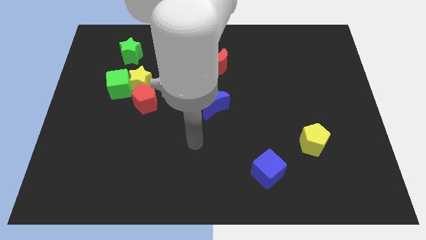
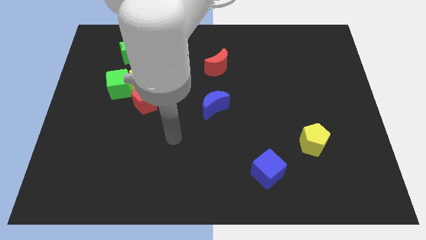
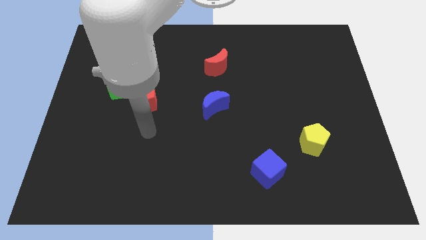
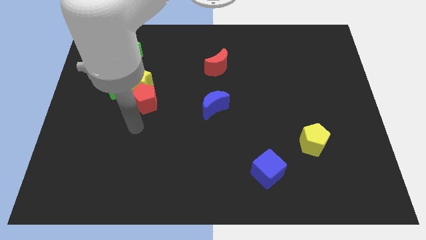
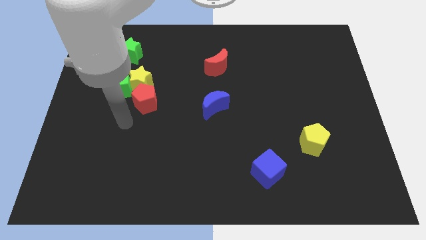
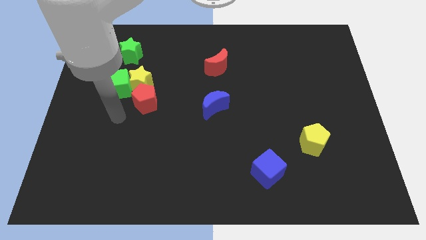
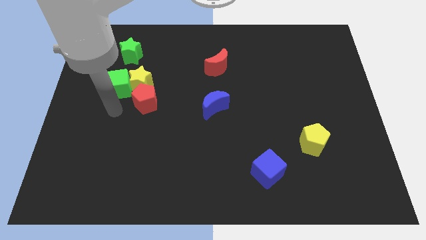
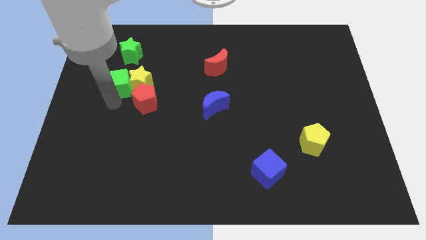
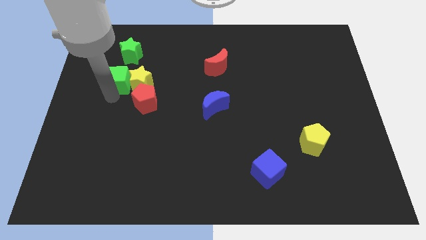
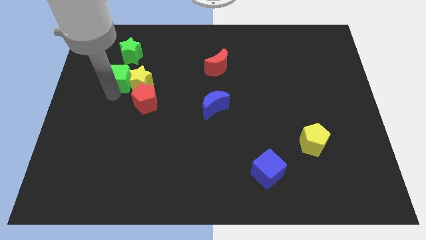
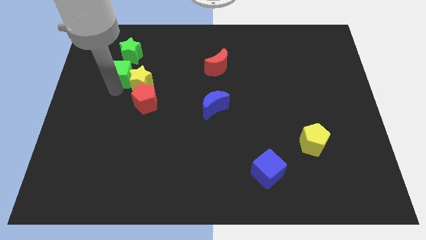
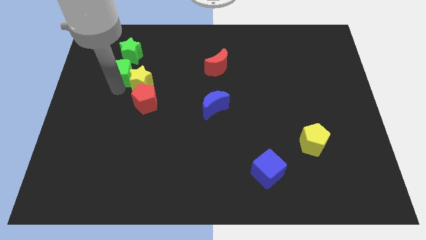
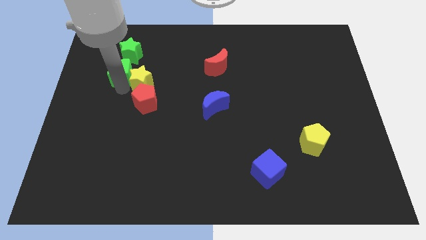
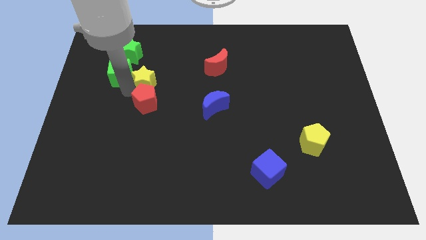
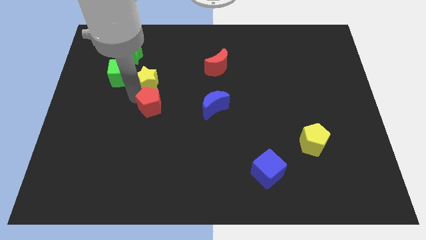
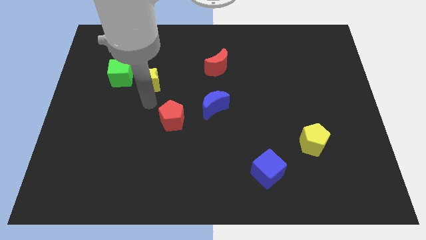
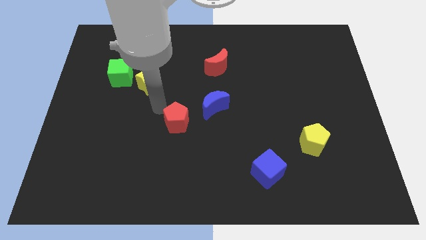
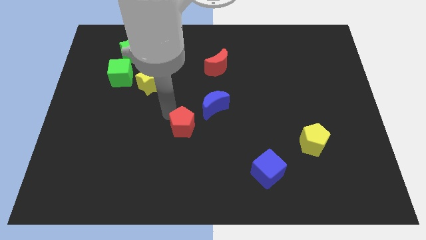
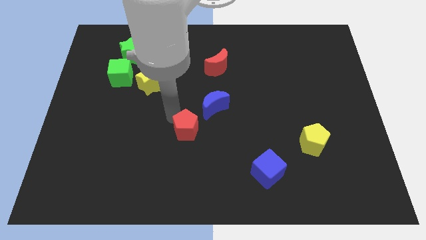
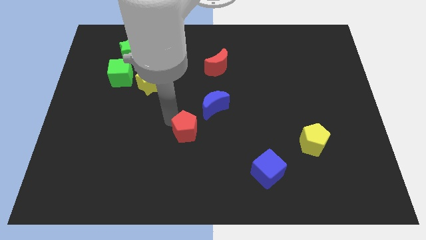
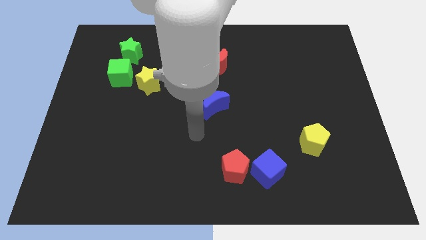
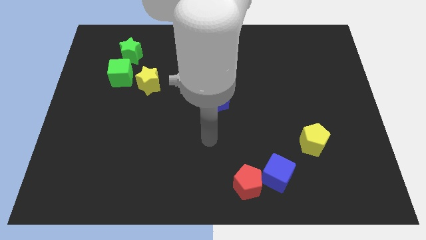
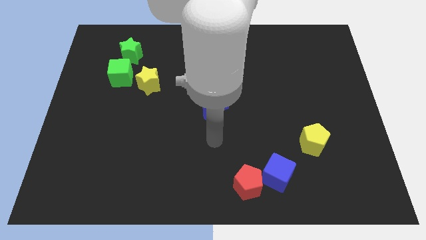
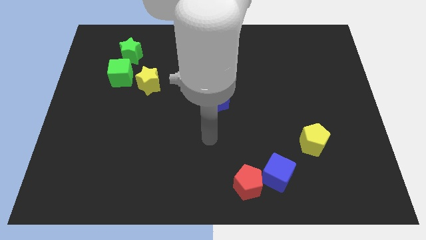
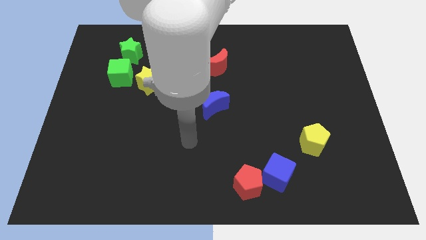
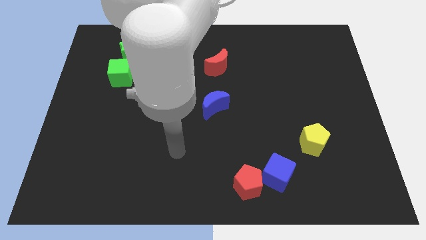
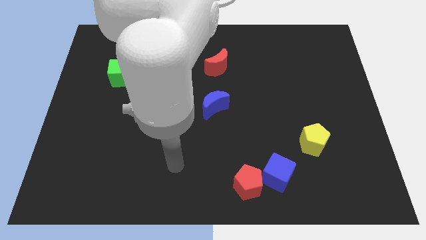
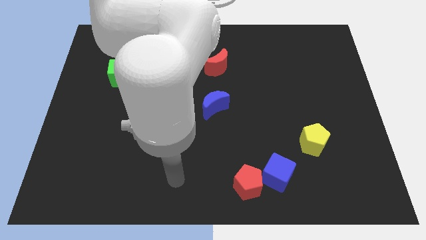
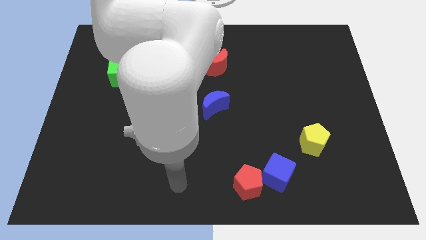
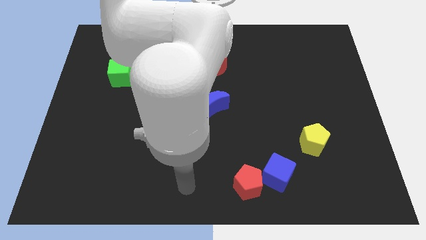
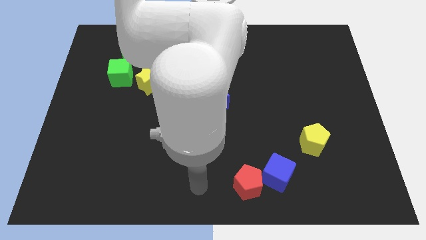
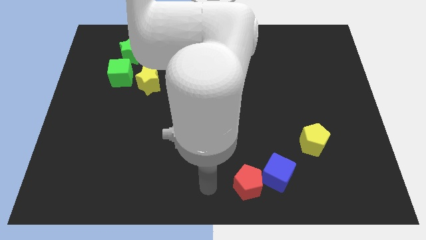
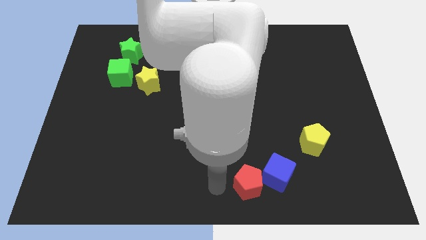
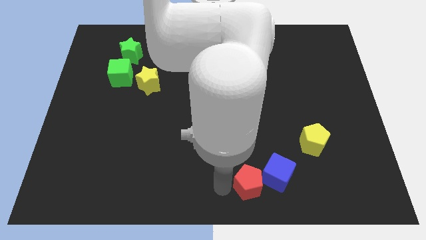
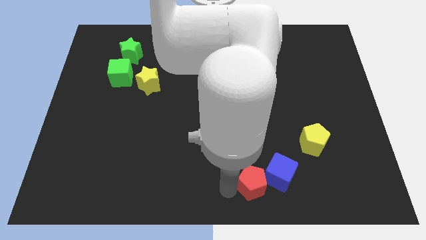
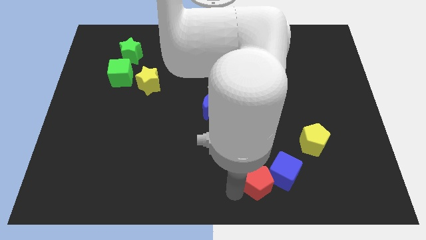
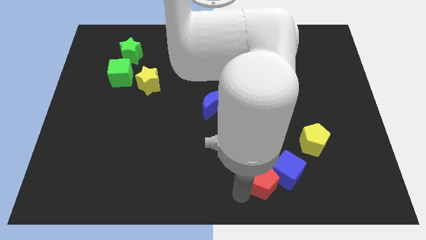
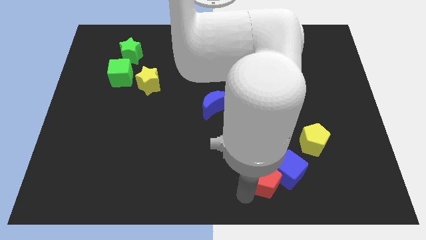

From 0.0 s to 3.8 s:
put the red pentagon to the blue cube

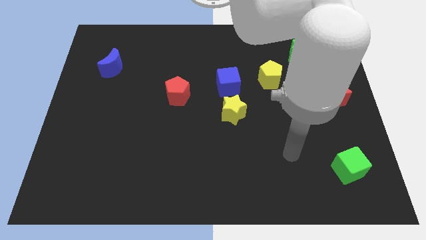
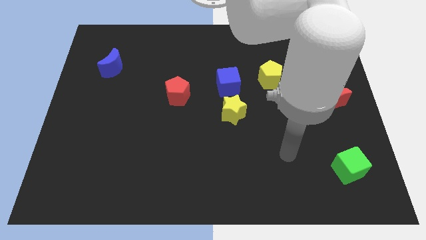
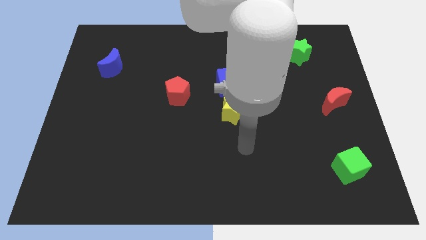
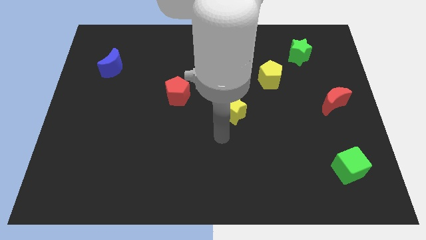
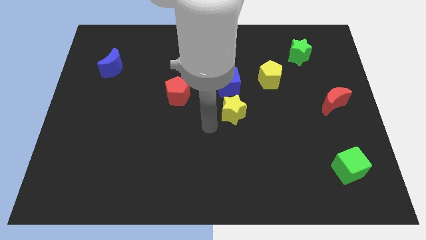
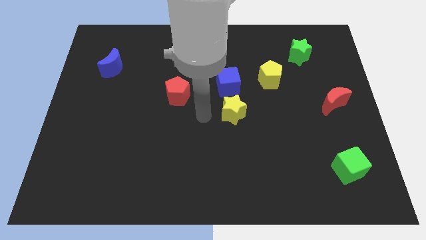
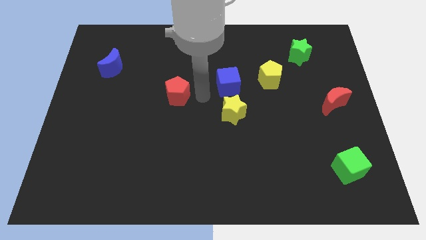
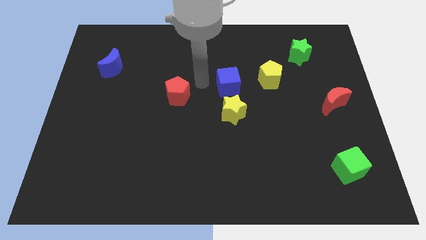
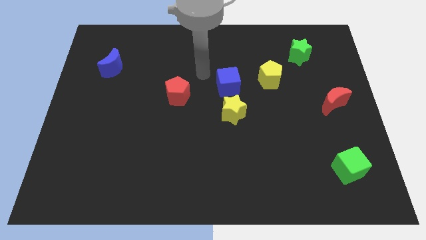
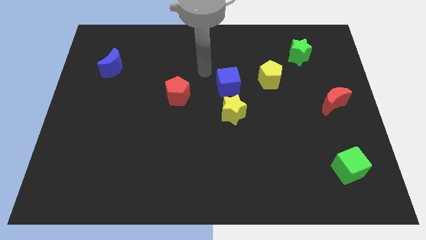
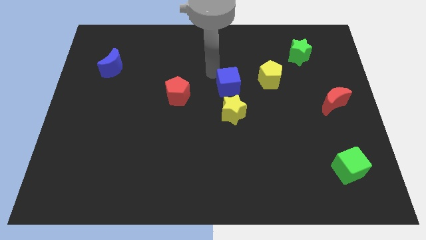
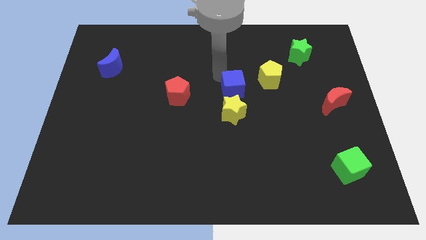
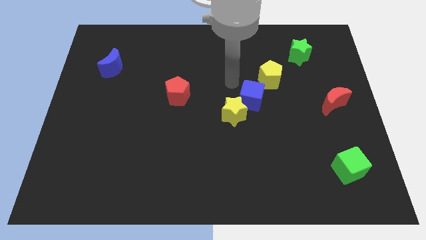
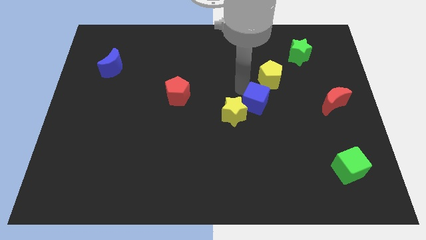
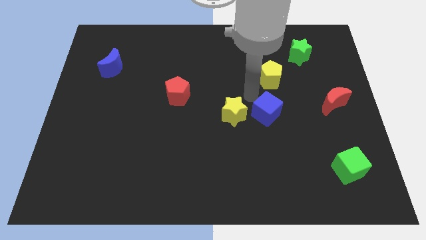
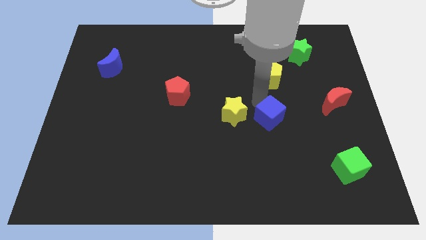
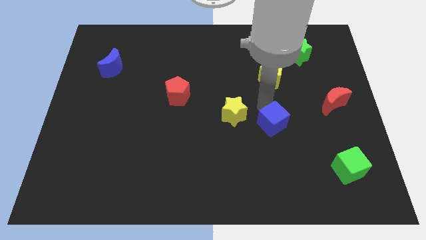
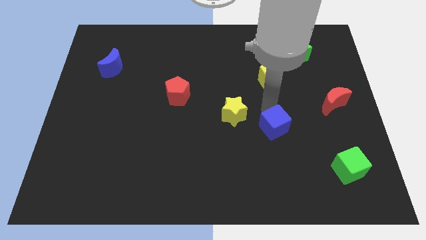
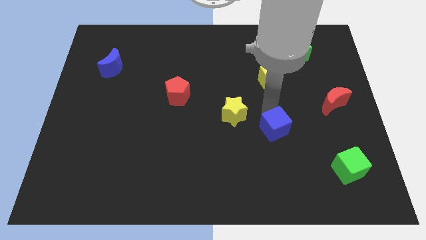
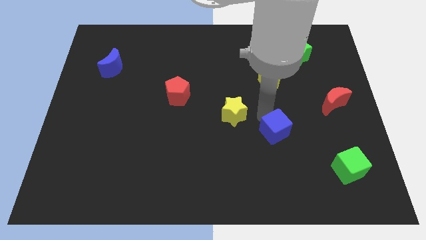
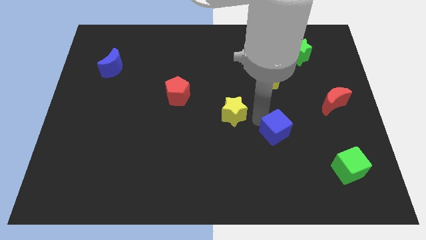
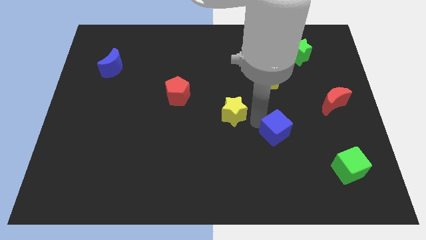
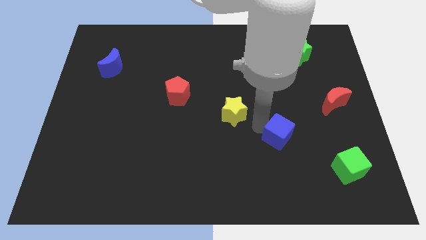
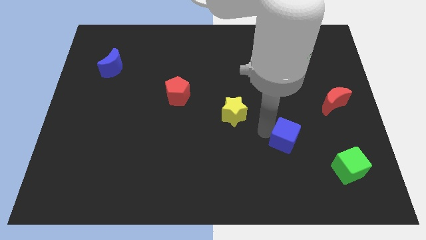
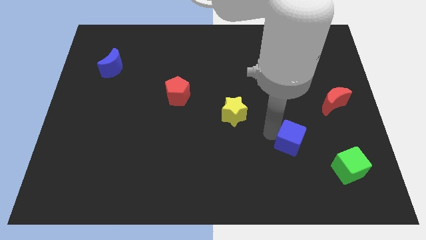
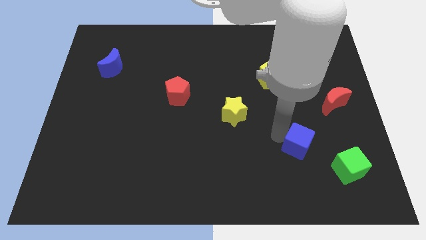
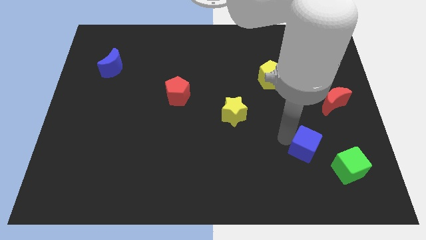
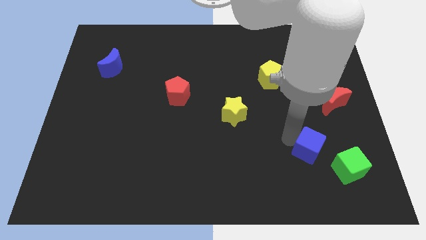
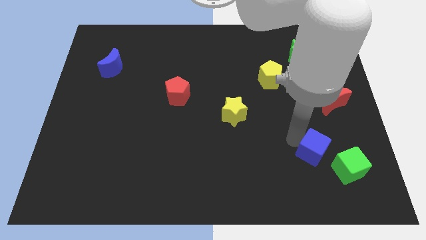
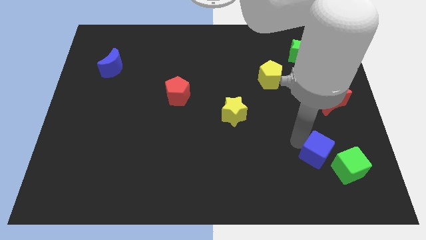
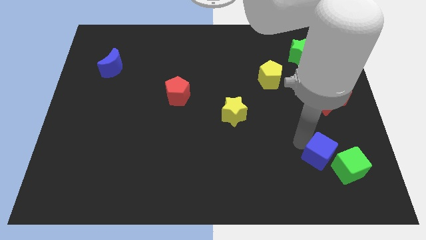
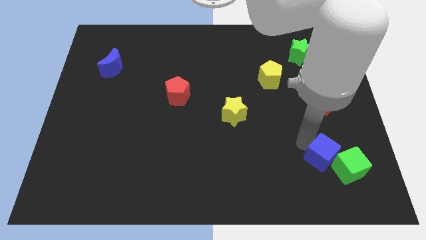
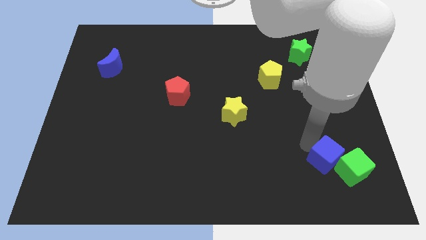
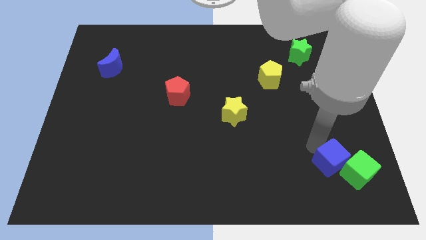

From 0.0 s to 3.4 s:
push the blue cube to the green cube

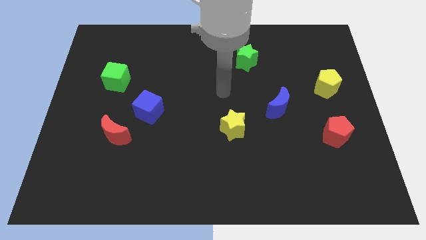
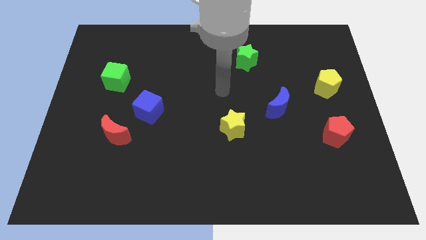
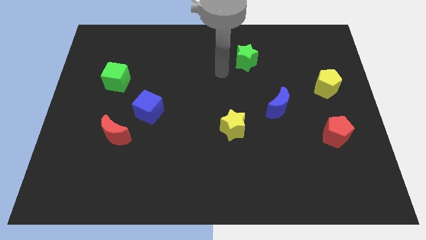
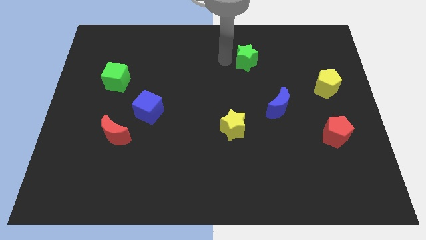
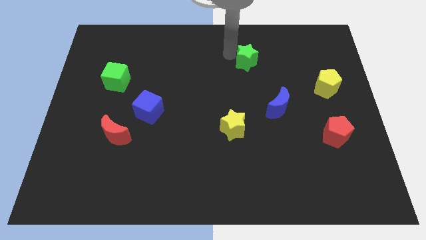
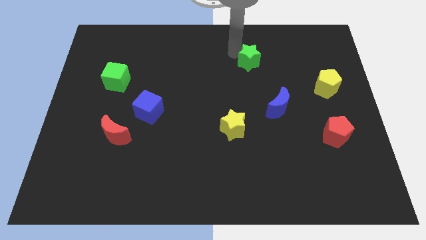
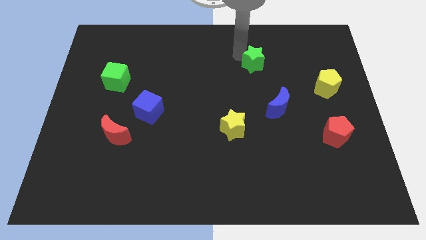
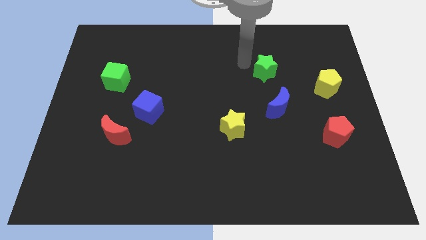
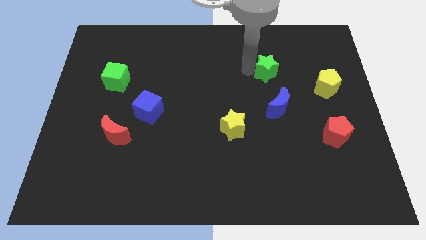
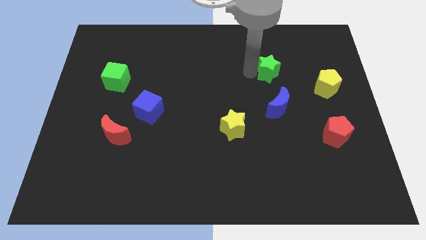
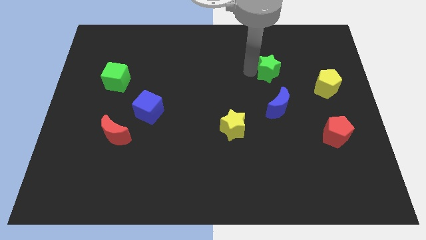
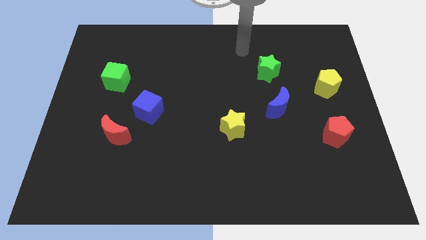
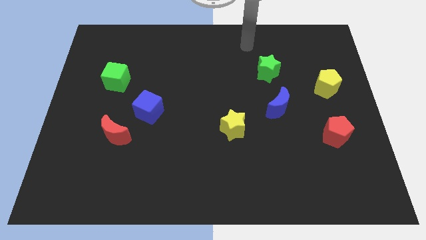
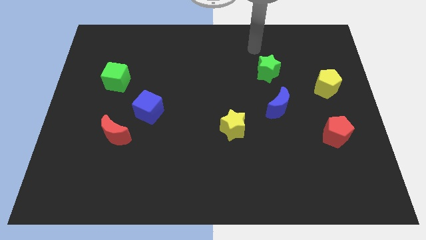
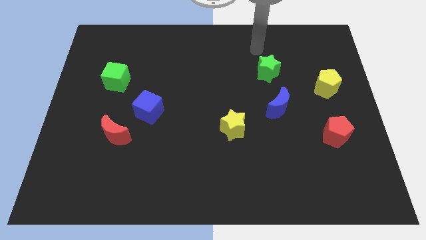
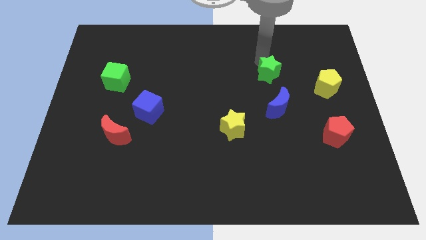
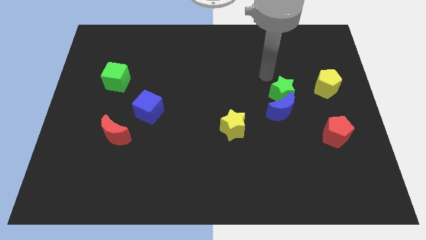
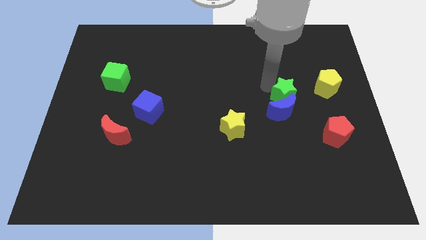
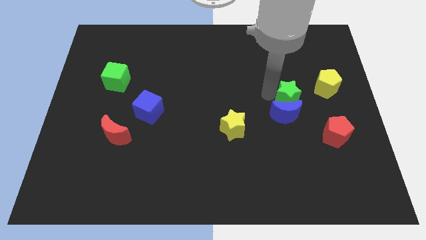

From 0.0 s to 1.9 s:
put the green star next to the blue moon
